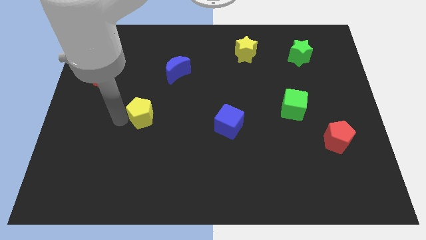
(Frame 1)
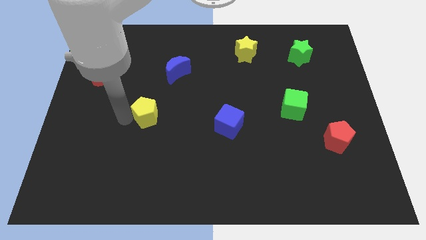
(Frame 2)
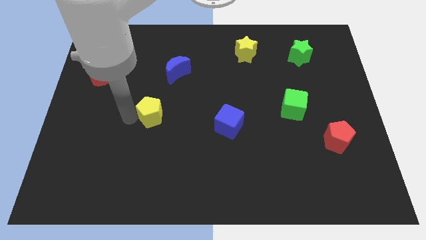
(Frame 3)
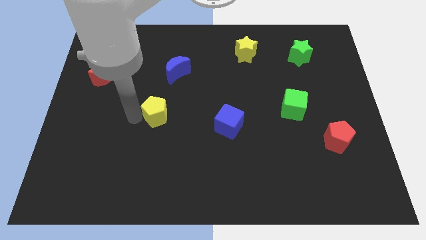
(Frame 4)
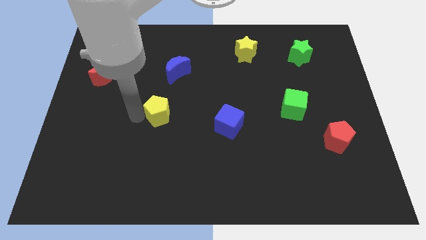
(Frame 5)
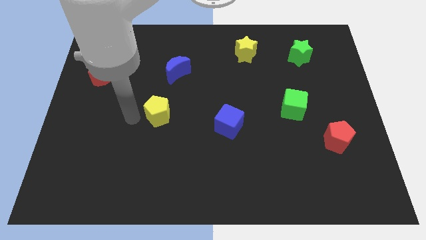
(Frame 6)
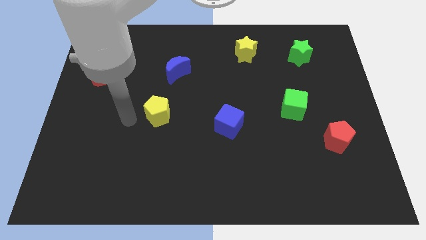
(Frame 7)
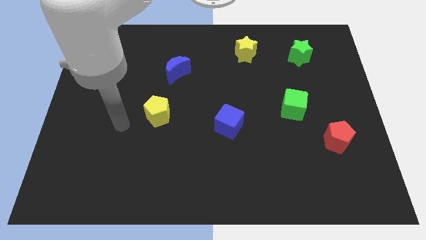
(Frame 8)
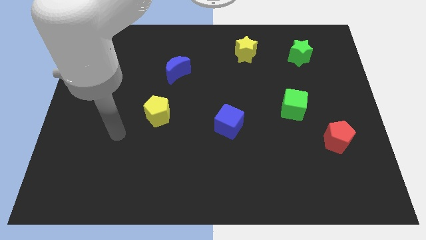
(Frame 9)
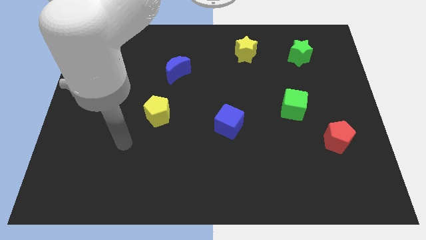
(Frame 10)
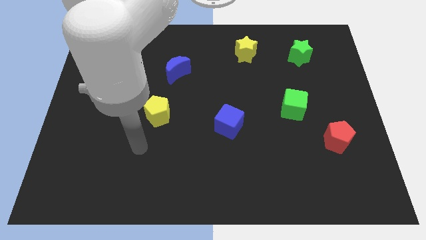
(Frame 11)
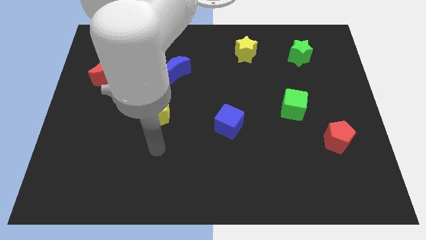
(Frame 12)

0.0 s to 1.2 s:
push the yellow pentagon to the center

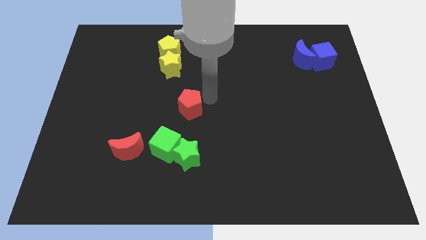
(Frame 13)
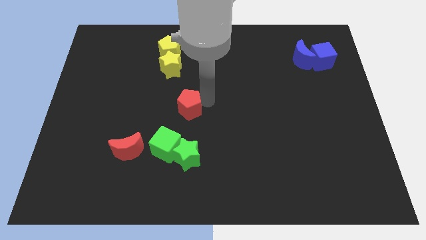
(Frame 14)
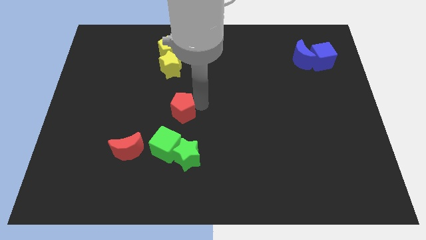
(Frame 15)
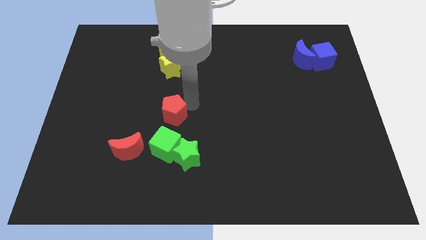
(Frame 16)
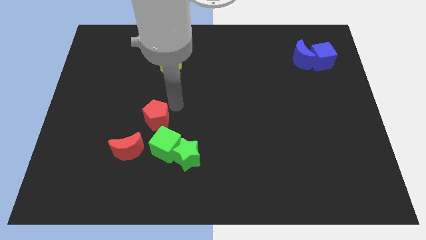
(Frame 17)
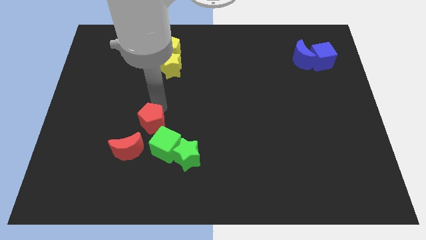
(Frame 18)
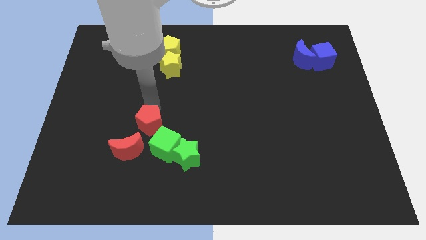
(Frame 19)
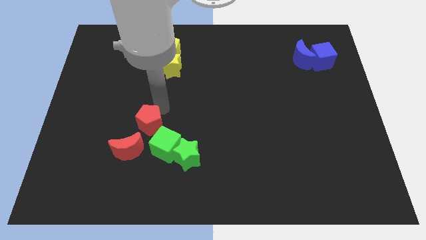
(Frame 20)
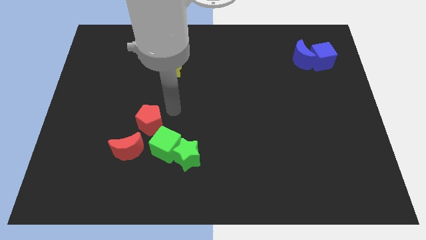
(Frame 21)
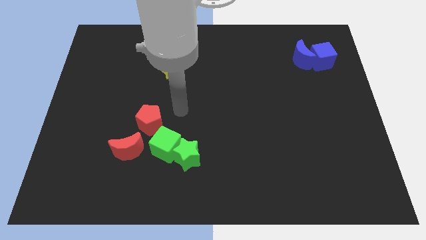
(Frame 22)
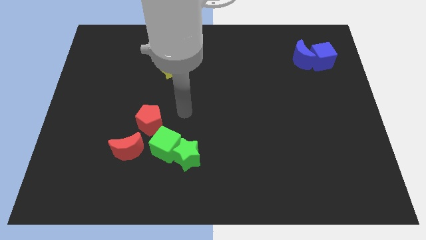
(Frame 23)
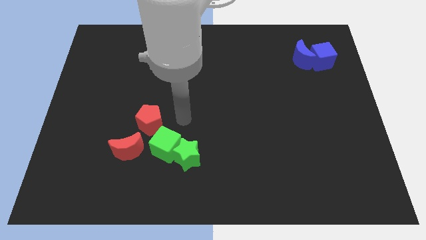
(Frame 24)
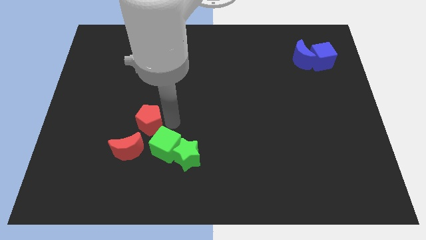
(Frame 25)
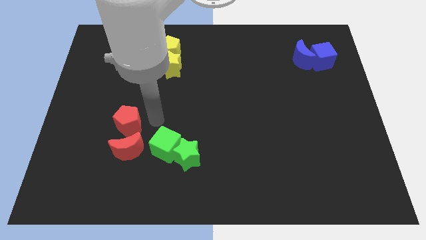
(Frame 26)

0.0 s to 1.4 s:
move the red pentagon to the top of the red crescent

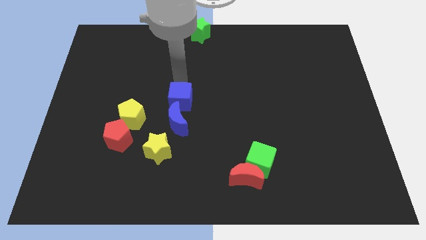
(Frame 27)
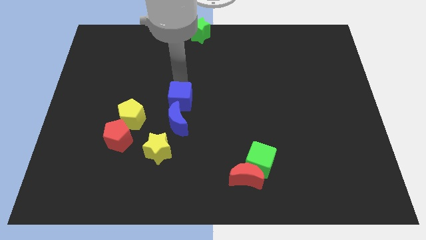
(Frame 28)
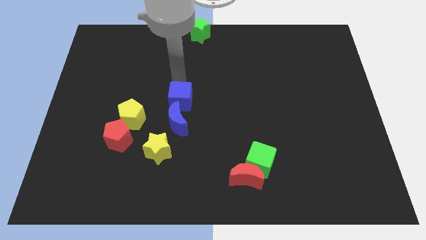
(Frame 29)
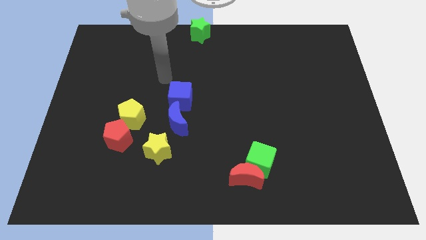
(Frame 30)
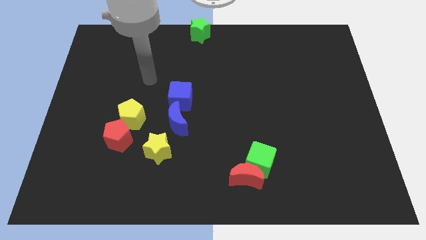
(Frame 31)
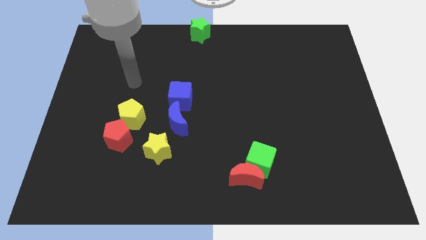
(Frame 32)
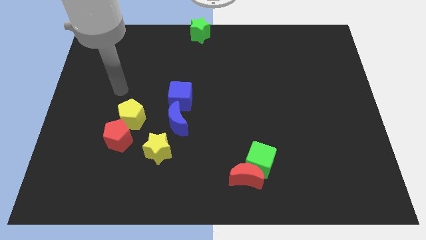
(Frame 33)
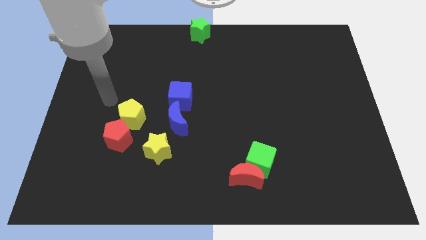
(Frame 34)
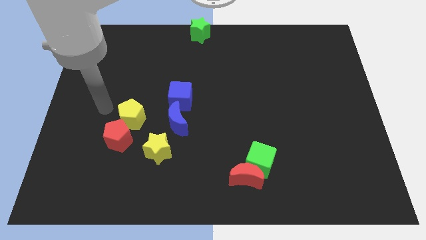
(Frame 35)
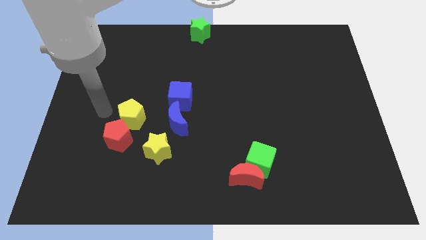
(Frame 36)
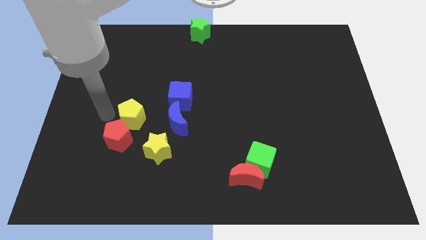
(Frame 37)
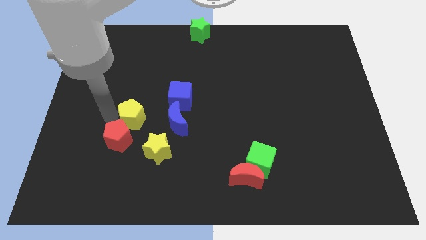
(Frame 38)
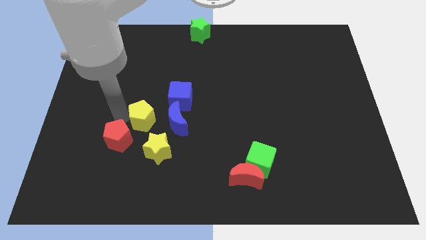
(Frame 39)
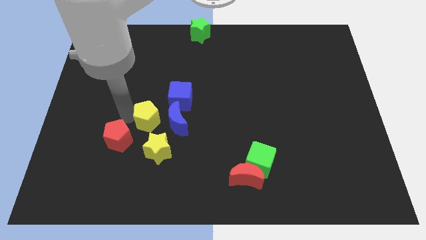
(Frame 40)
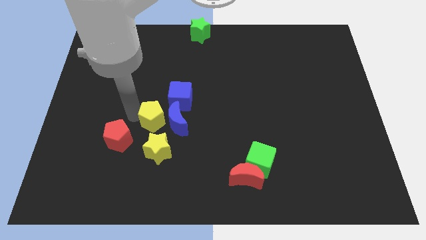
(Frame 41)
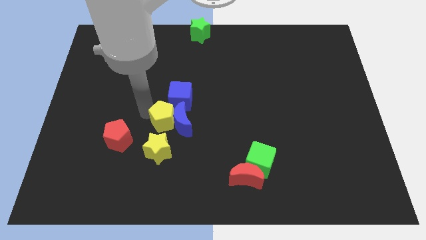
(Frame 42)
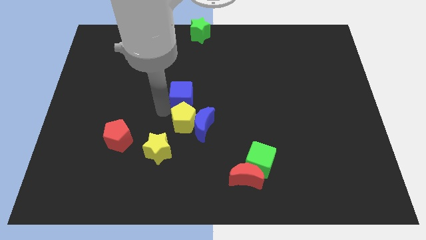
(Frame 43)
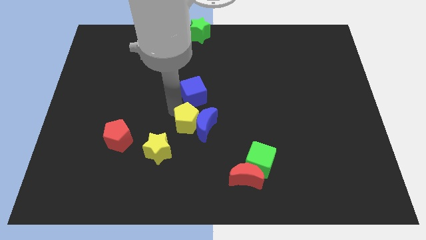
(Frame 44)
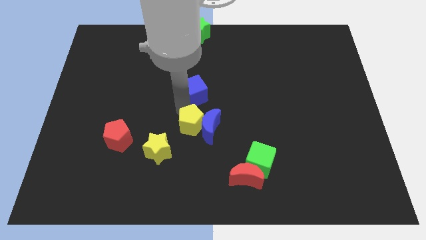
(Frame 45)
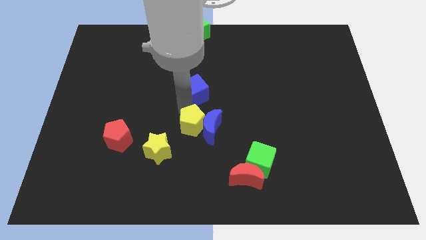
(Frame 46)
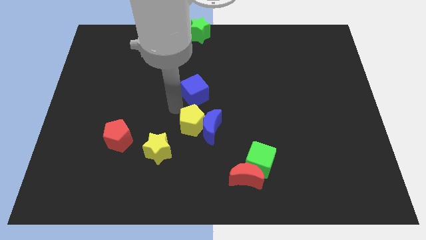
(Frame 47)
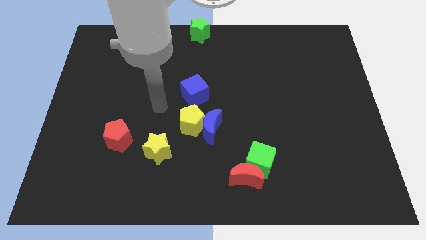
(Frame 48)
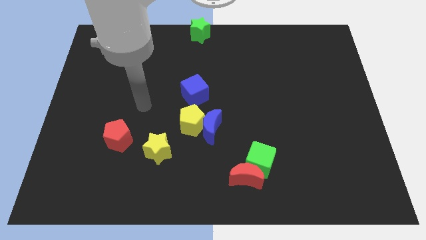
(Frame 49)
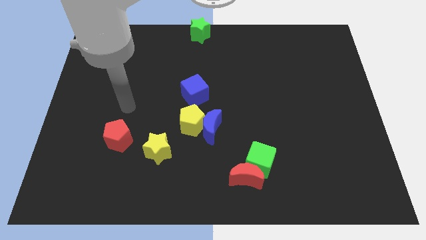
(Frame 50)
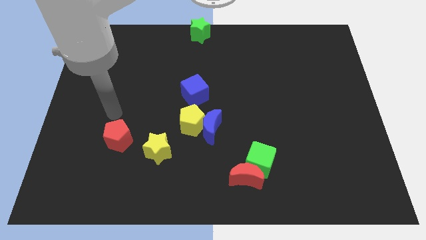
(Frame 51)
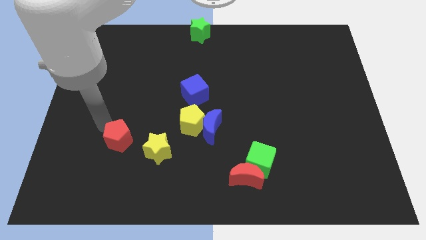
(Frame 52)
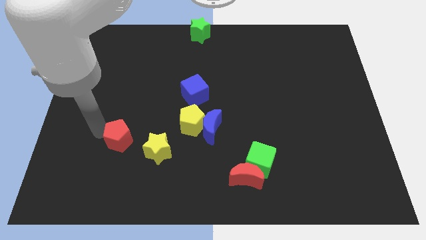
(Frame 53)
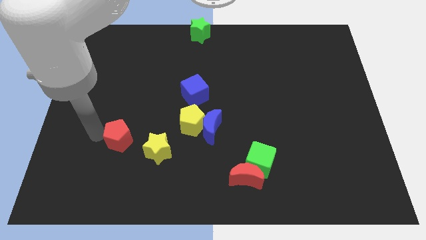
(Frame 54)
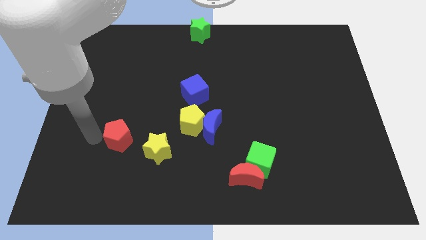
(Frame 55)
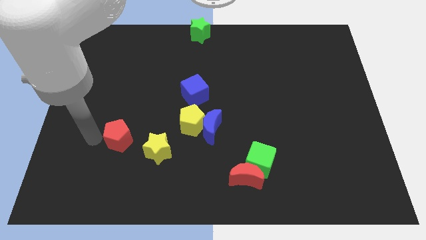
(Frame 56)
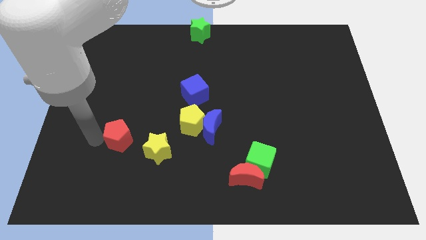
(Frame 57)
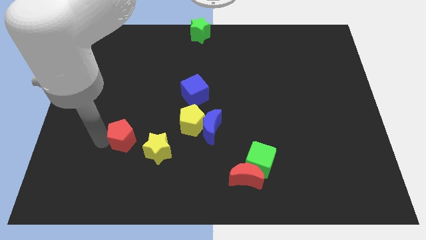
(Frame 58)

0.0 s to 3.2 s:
place the yellow pentagon and blue moon at the center of the board

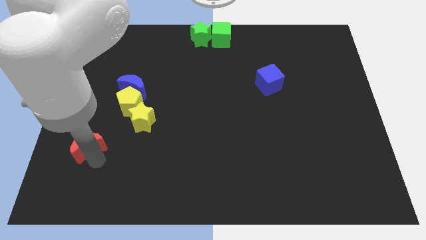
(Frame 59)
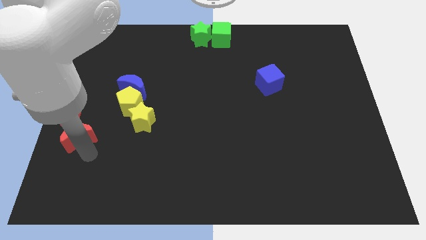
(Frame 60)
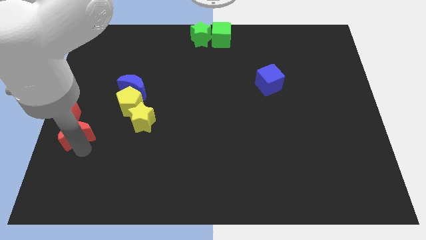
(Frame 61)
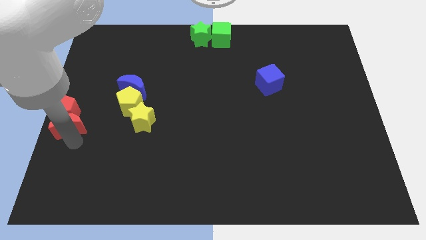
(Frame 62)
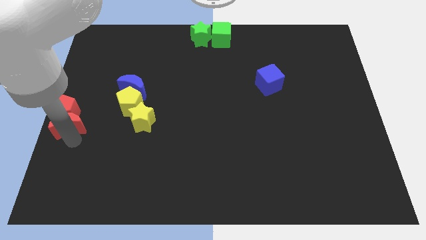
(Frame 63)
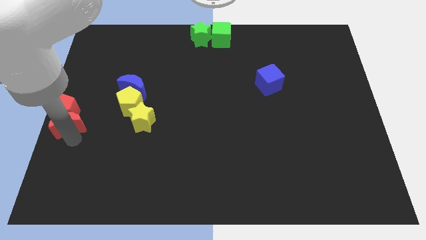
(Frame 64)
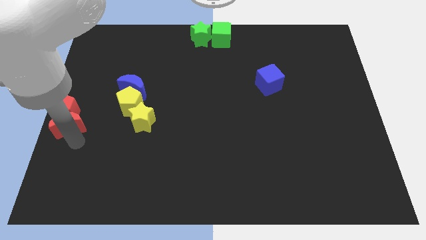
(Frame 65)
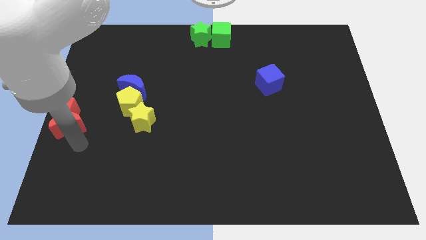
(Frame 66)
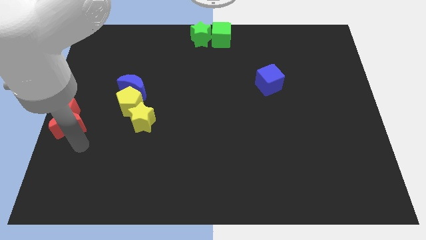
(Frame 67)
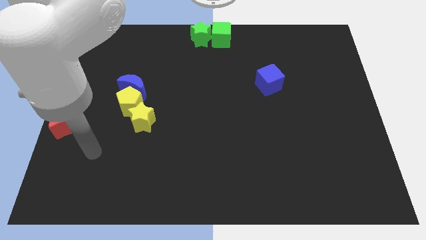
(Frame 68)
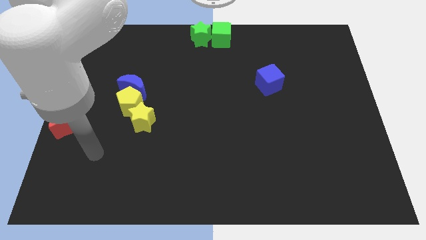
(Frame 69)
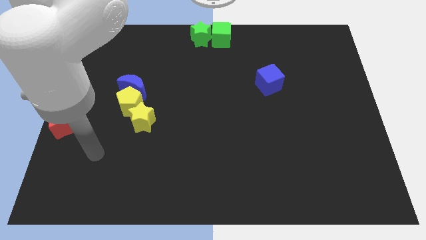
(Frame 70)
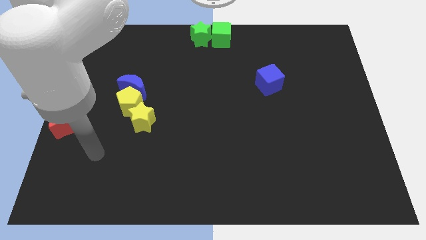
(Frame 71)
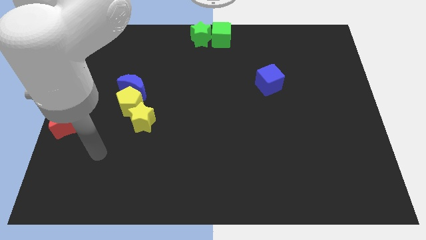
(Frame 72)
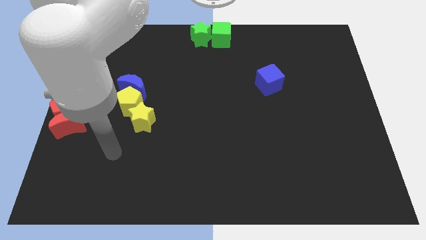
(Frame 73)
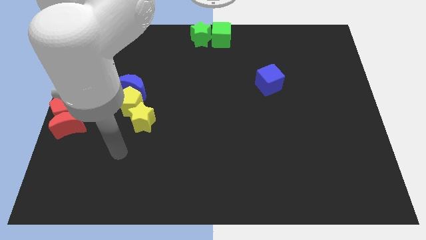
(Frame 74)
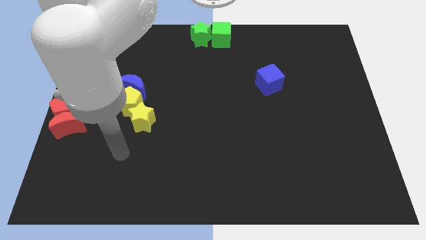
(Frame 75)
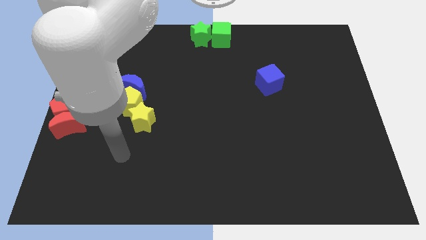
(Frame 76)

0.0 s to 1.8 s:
push the red moon into the red pentagon

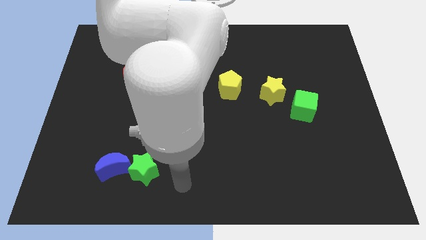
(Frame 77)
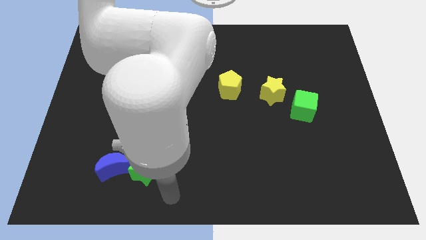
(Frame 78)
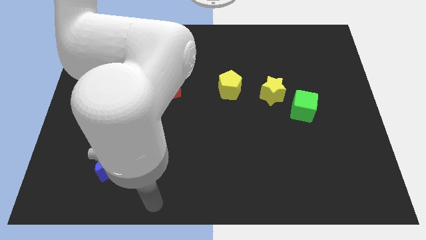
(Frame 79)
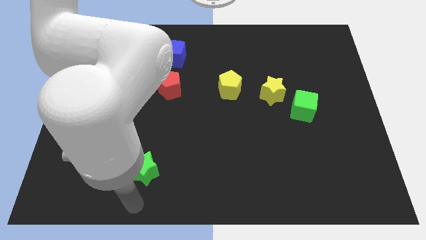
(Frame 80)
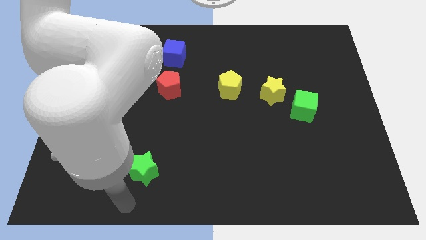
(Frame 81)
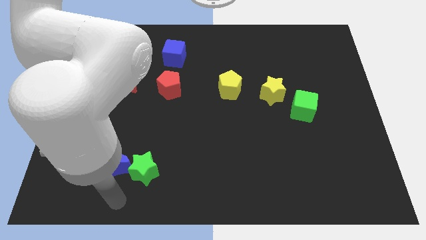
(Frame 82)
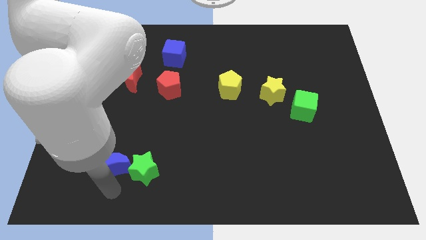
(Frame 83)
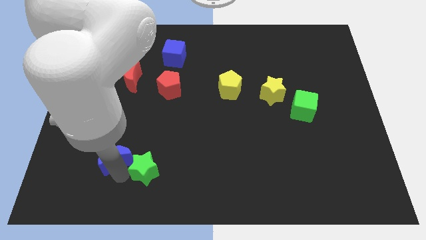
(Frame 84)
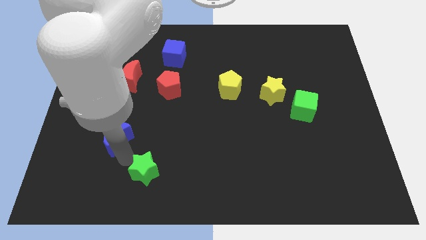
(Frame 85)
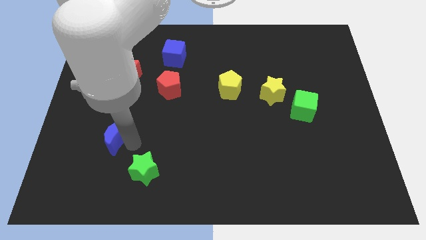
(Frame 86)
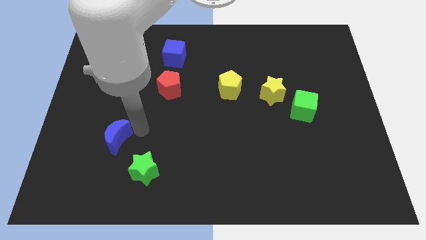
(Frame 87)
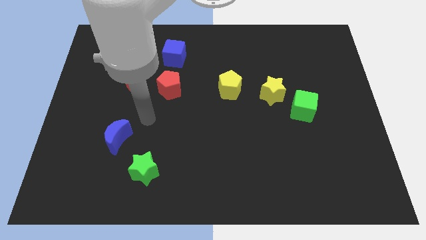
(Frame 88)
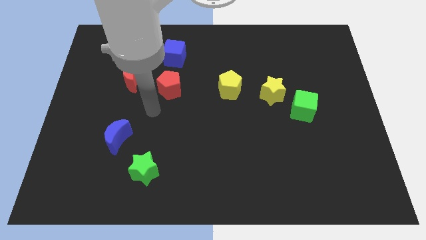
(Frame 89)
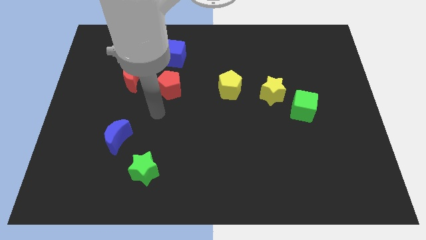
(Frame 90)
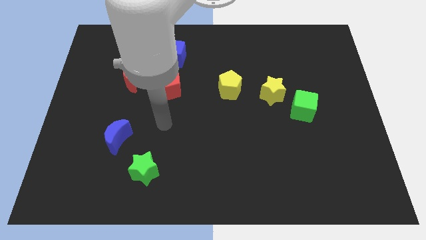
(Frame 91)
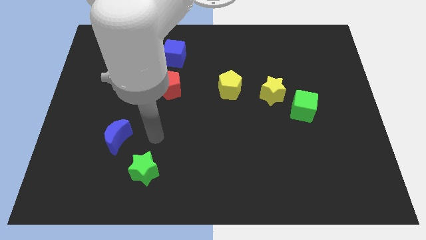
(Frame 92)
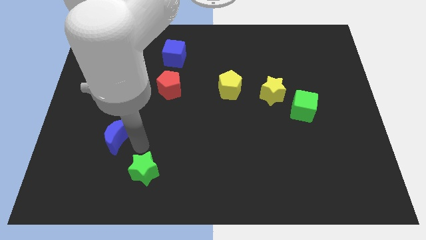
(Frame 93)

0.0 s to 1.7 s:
separate blue moon an green star
